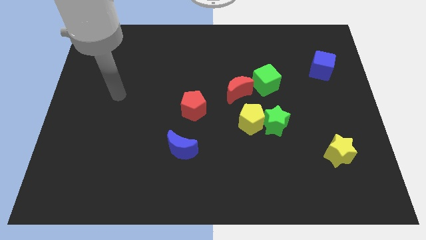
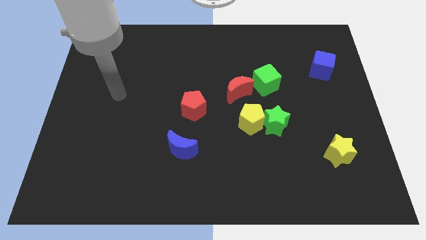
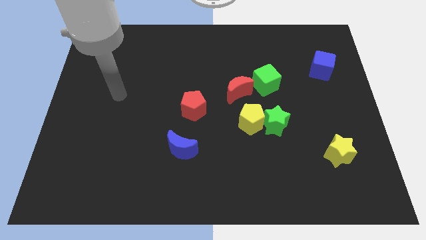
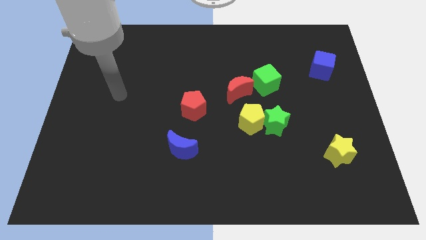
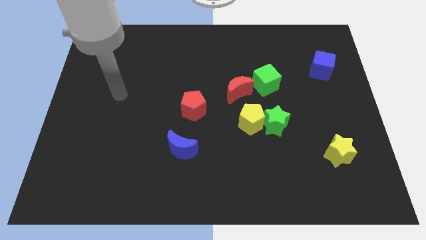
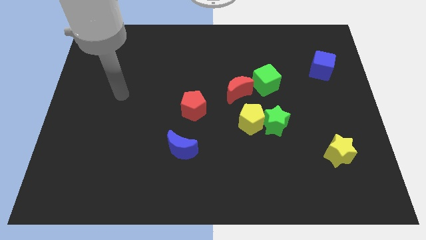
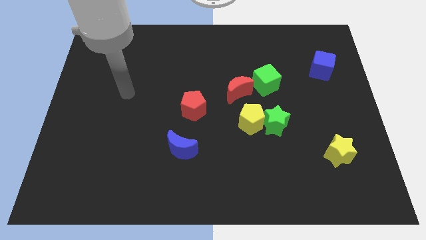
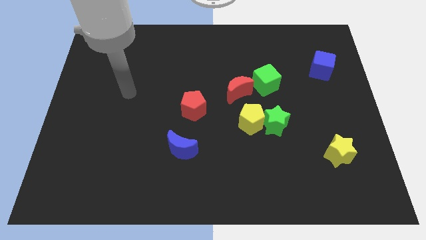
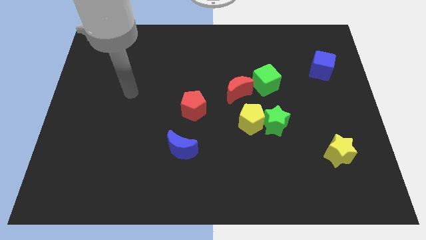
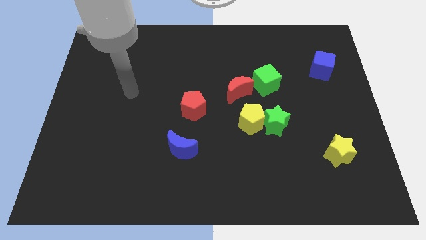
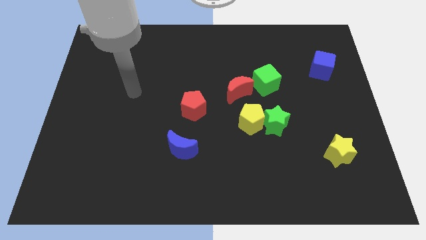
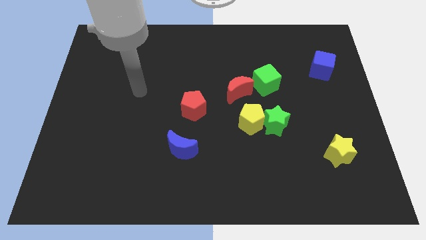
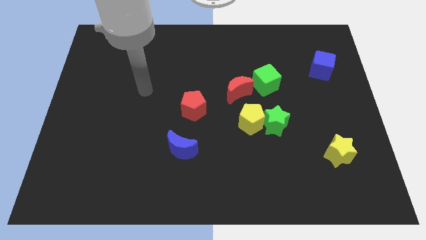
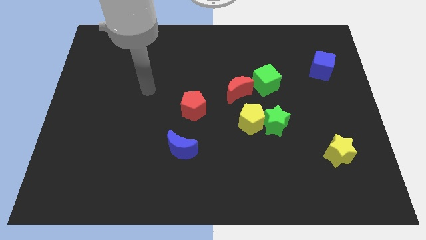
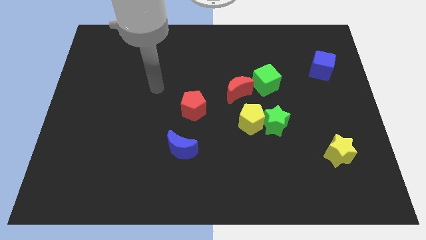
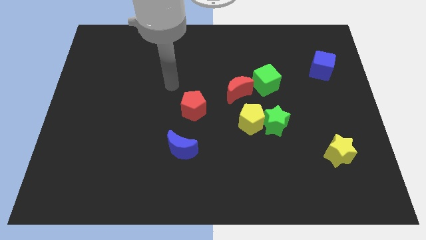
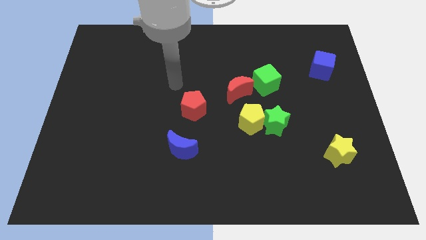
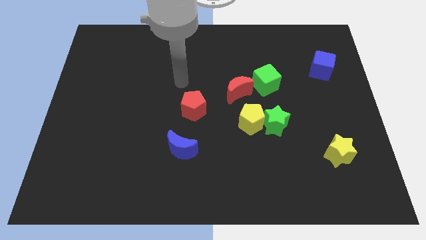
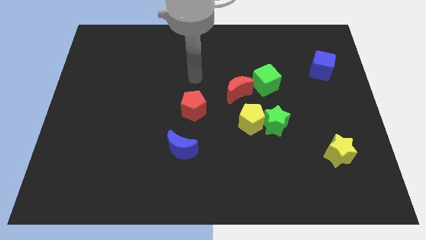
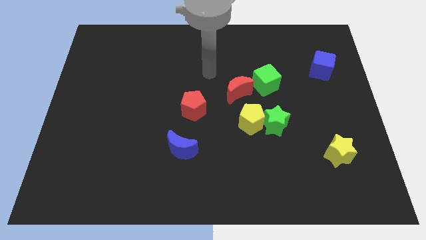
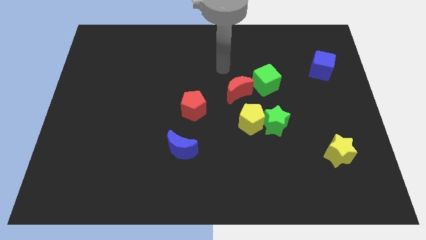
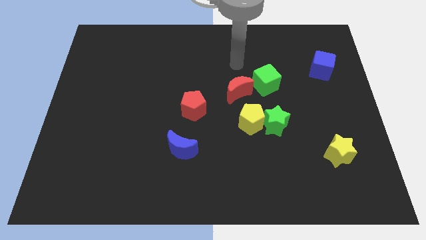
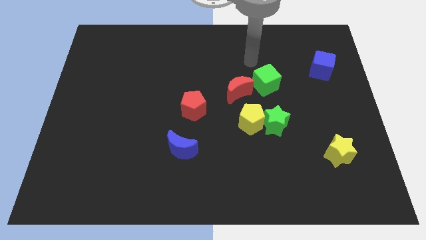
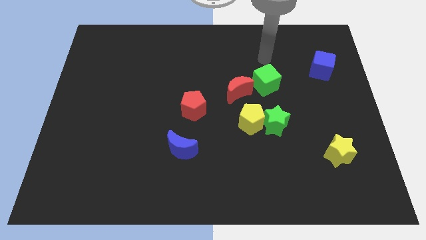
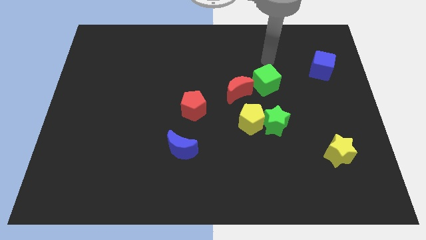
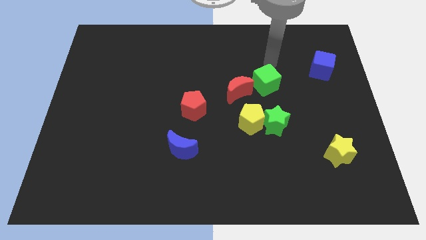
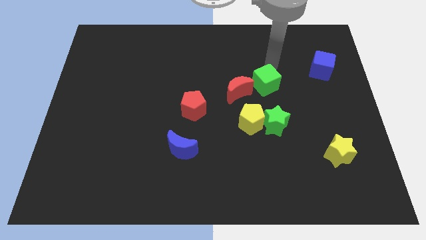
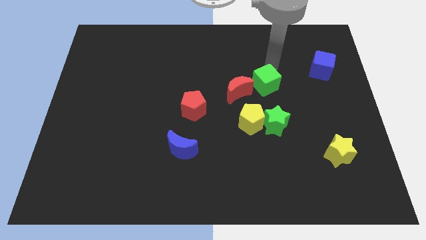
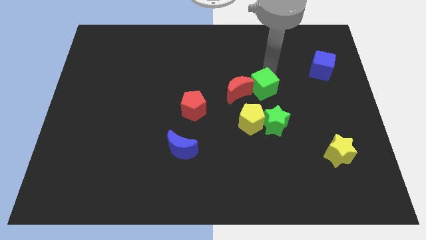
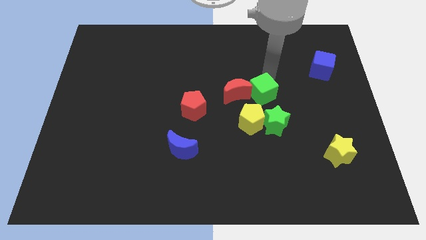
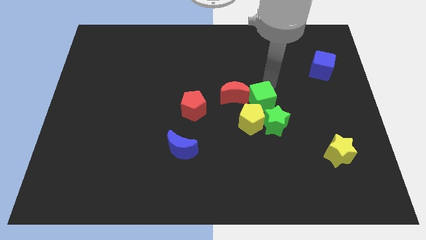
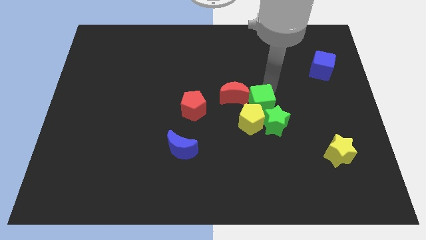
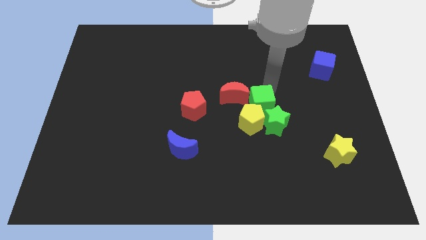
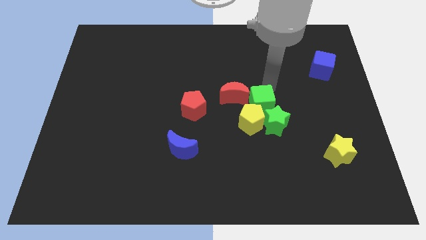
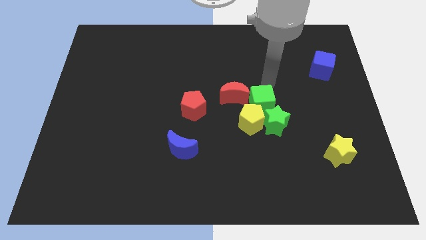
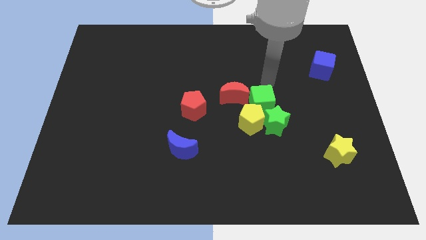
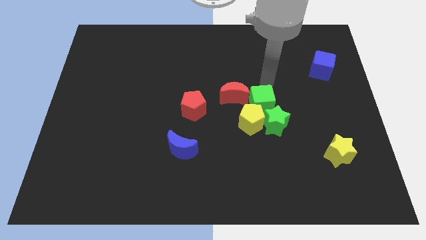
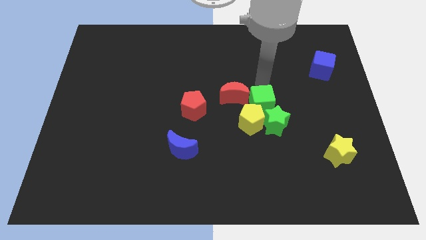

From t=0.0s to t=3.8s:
push the green cube into the yellow pentagon

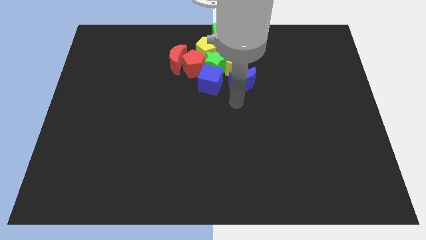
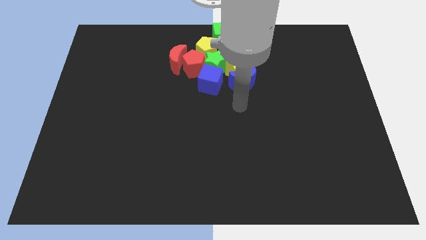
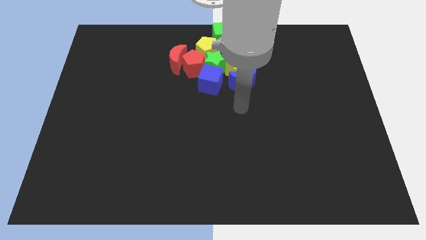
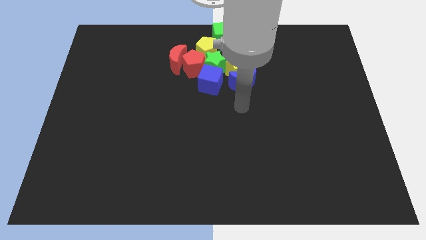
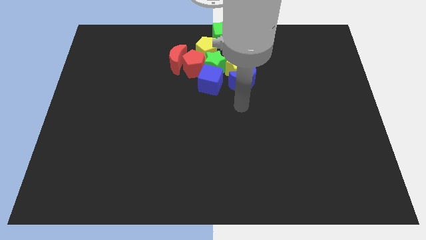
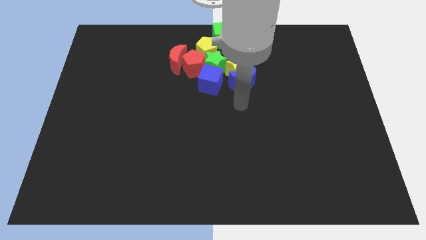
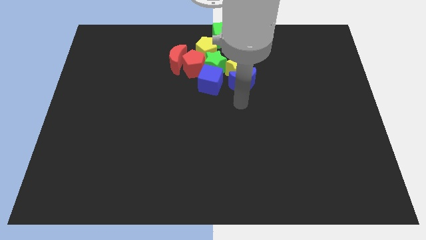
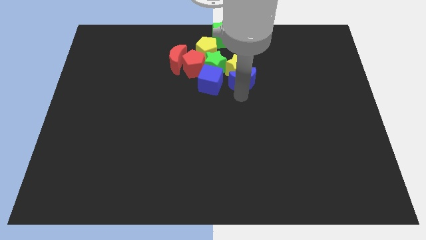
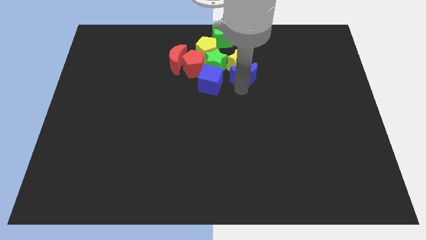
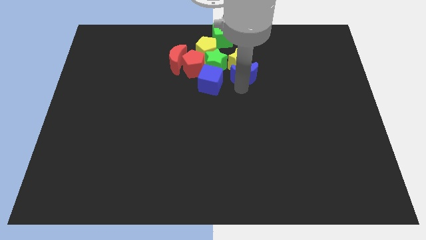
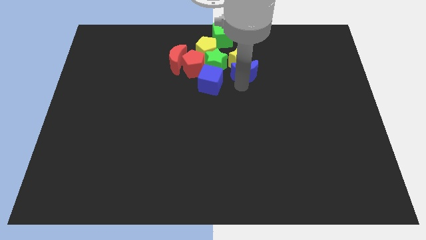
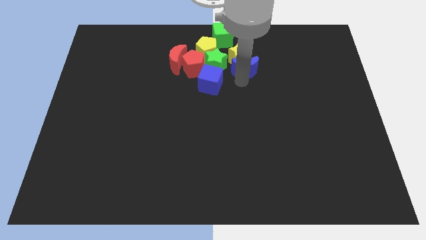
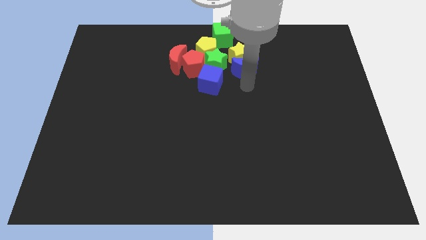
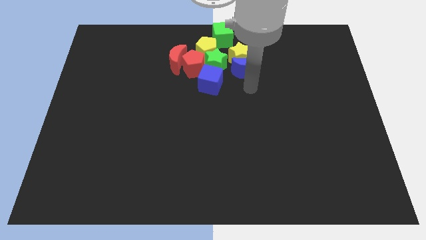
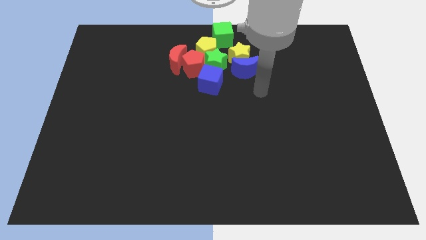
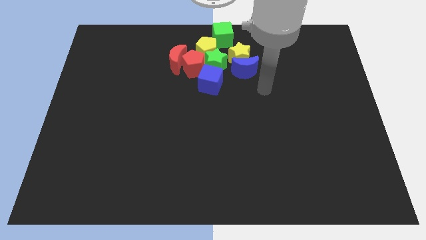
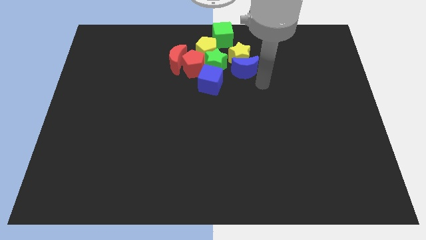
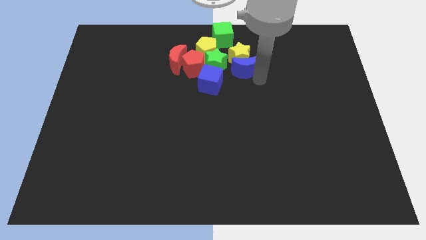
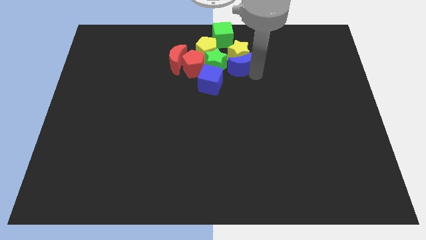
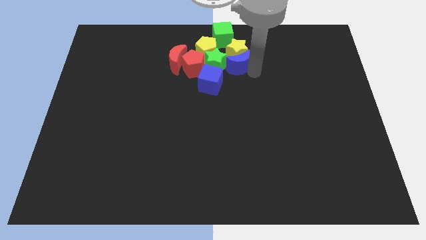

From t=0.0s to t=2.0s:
move the blue crescent and the yellow star up slightly

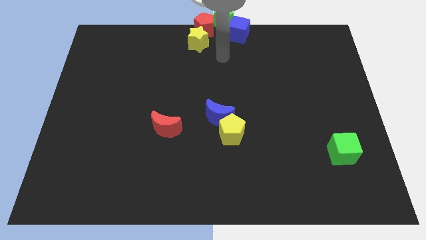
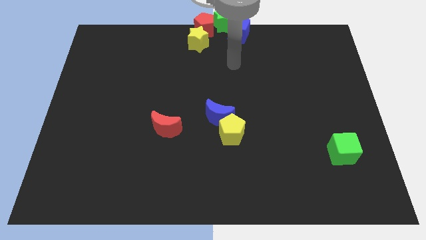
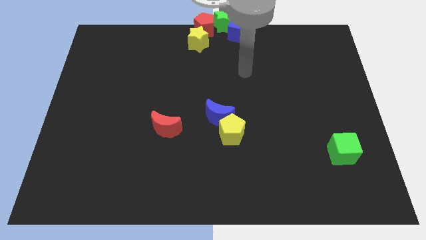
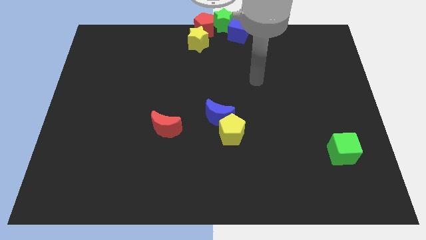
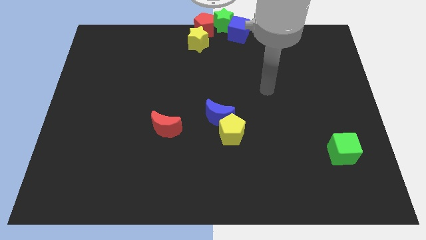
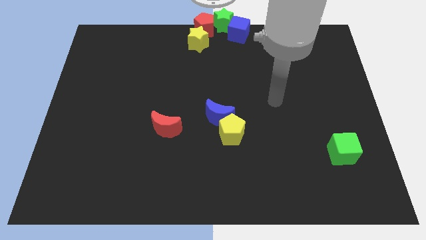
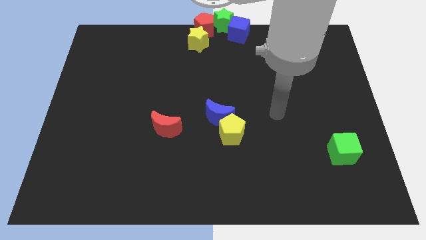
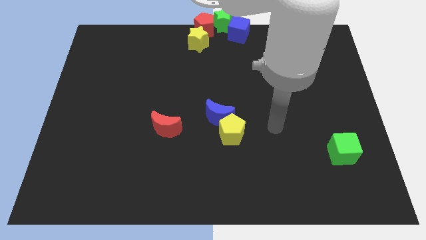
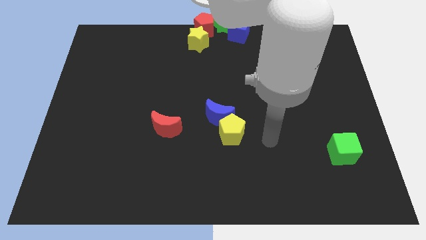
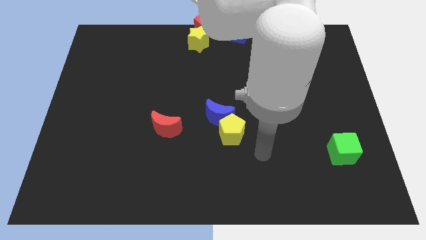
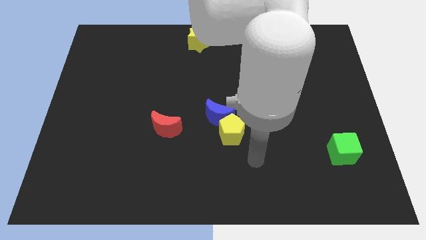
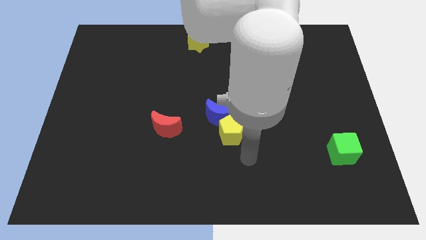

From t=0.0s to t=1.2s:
point your arm at the bottom of the yellow pentagon

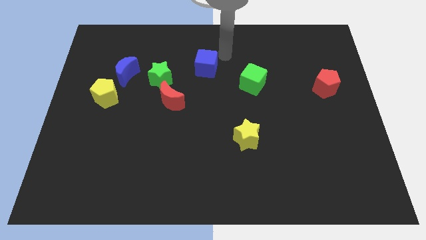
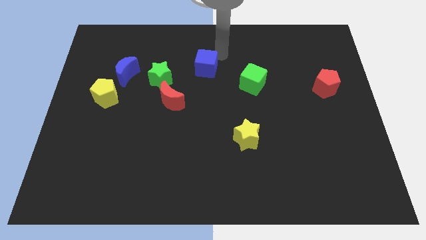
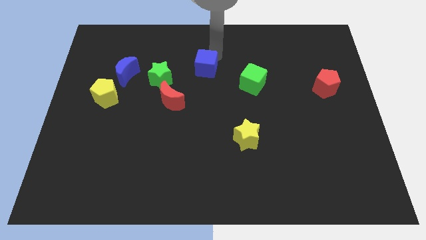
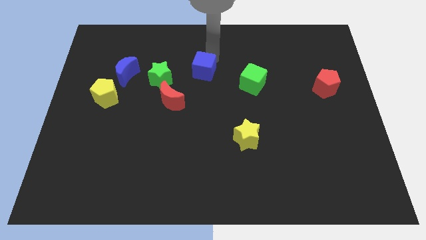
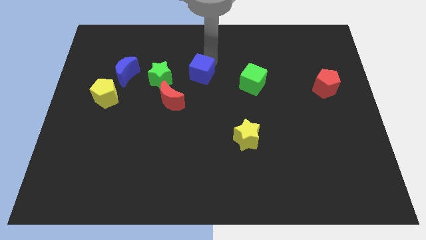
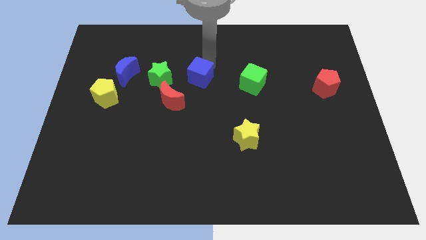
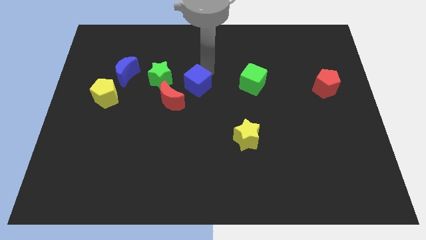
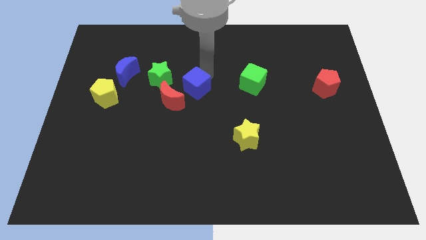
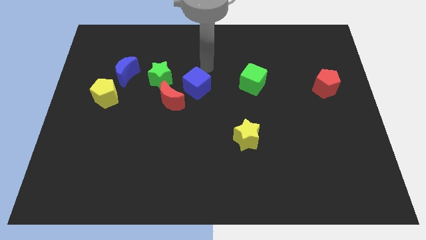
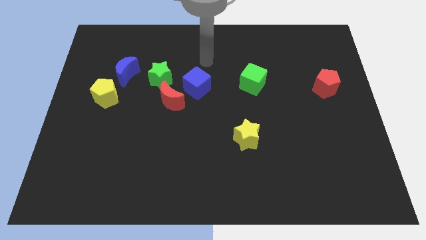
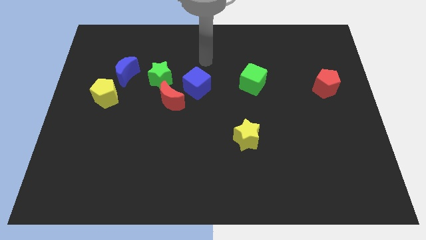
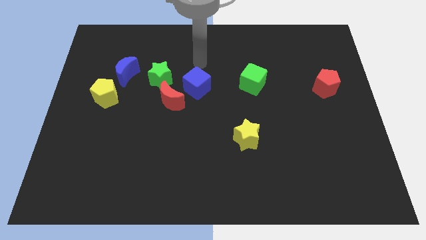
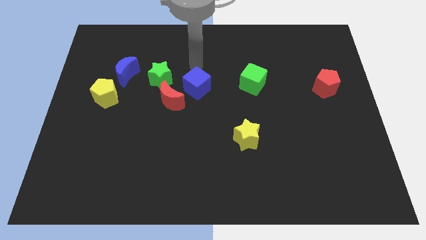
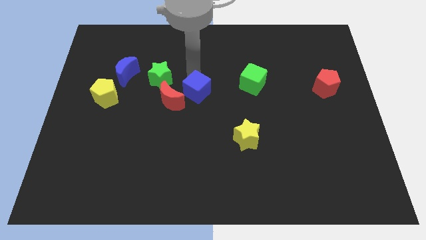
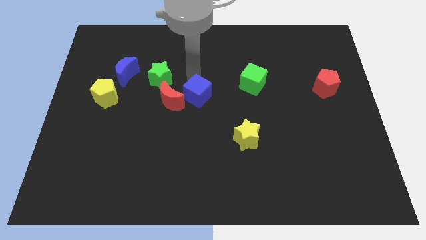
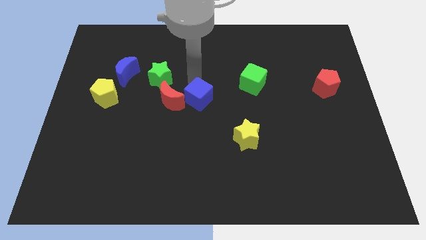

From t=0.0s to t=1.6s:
push the blue cube to the right side of the red moon

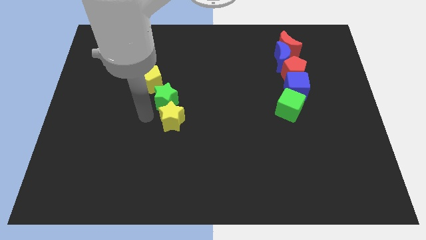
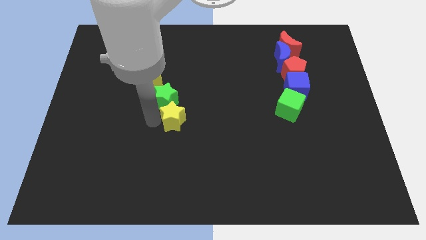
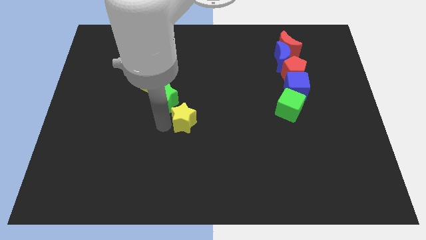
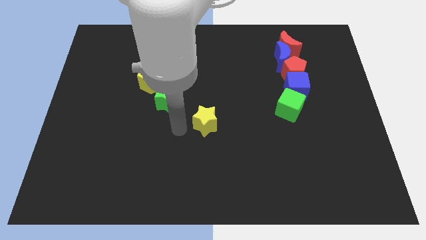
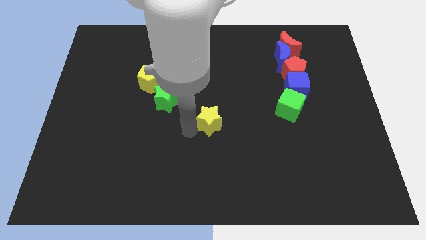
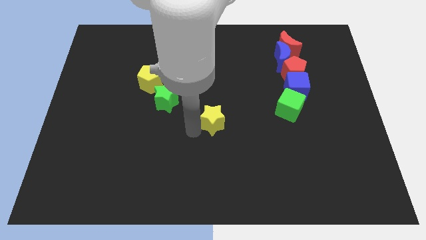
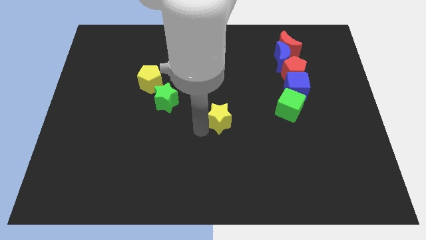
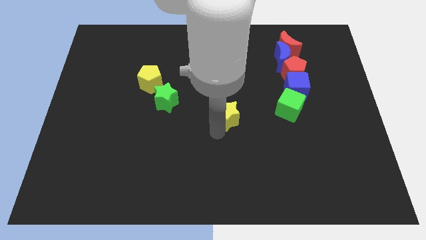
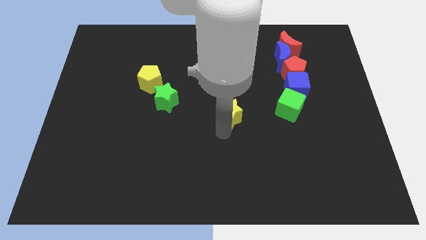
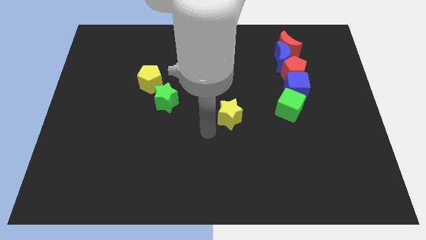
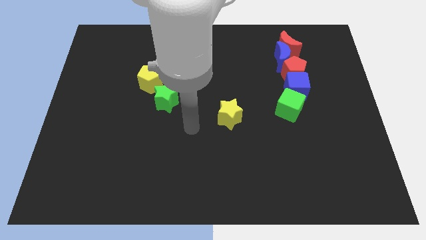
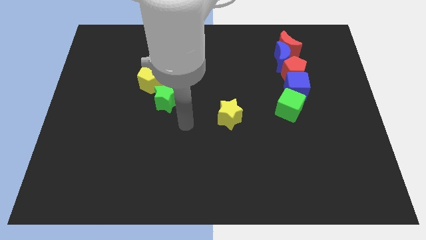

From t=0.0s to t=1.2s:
move the yellow star to the center of the board
